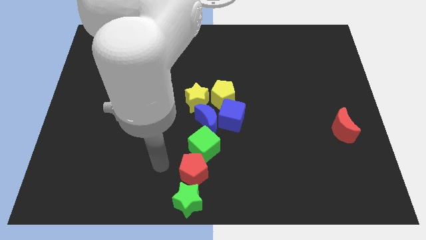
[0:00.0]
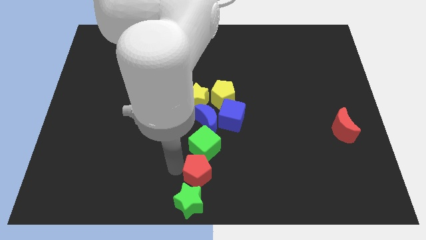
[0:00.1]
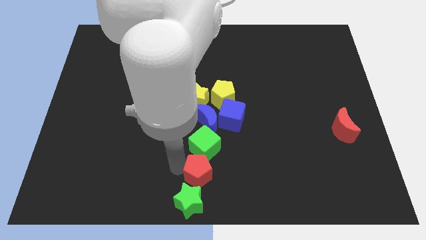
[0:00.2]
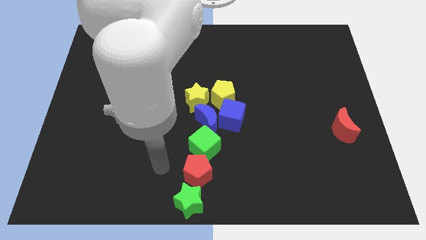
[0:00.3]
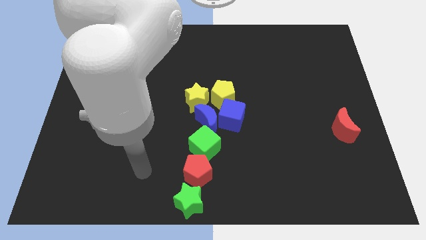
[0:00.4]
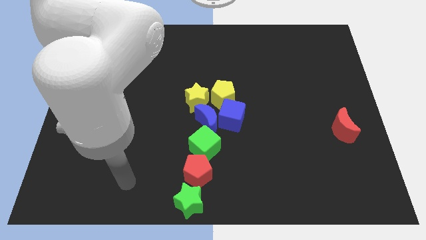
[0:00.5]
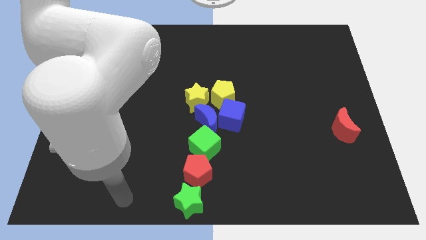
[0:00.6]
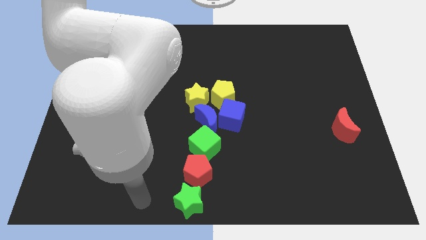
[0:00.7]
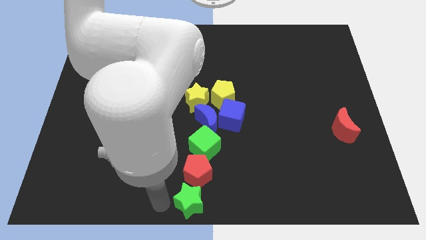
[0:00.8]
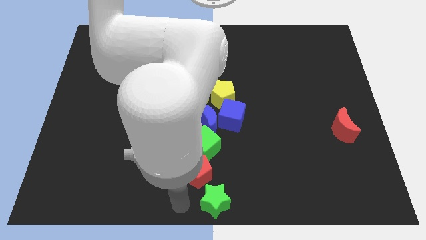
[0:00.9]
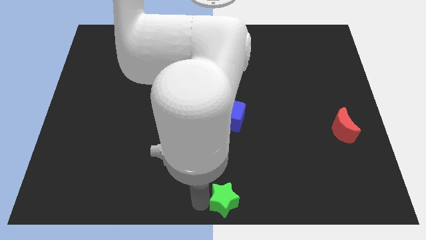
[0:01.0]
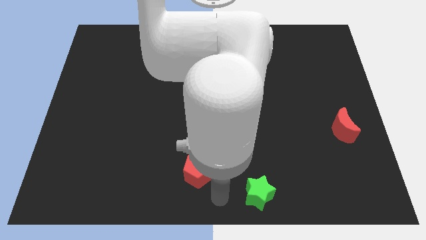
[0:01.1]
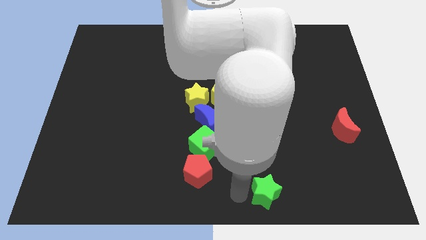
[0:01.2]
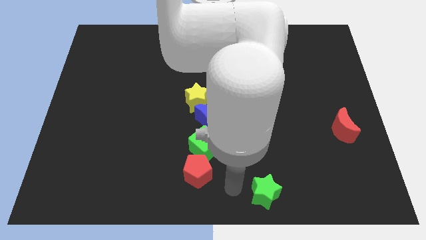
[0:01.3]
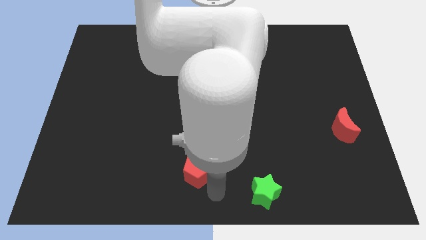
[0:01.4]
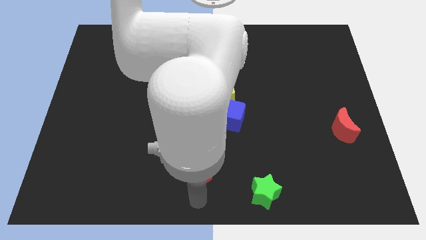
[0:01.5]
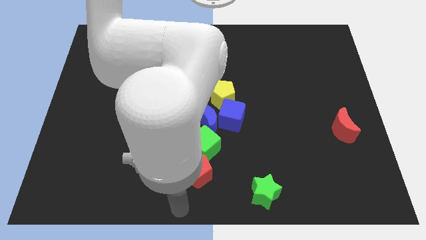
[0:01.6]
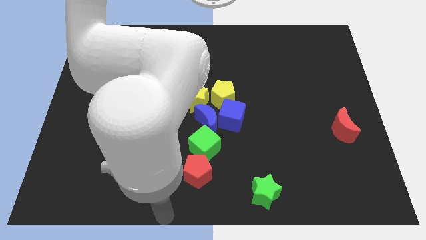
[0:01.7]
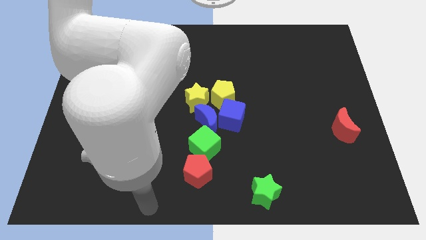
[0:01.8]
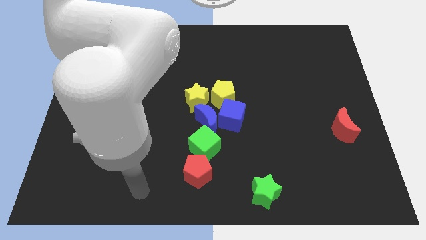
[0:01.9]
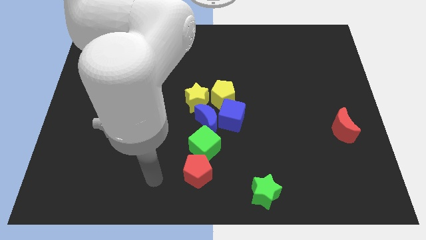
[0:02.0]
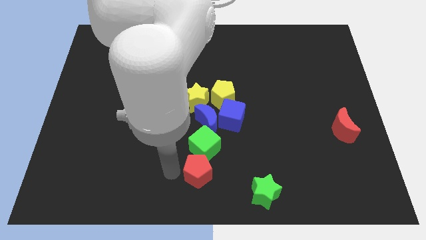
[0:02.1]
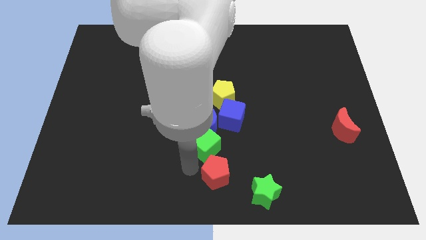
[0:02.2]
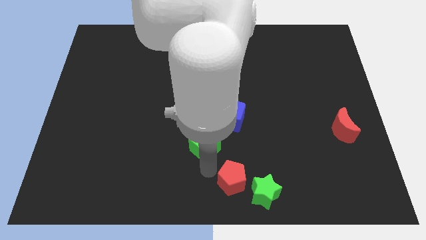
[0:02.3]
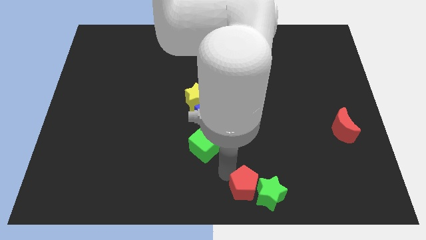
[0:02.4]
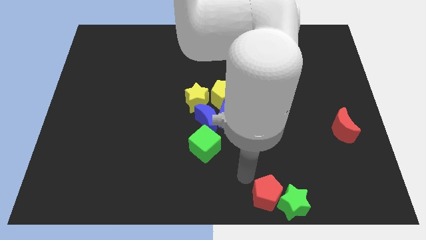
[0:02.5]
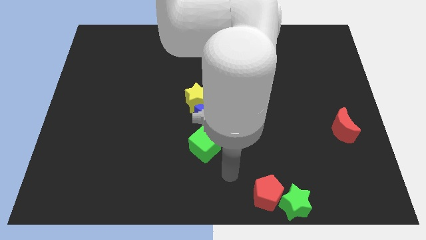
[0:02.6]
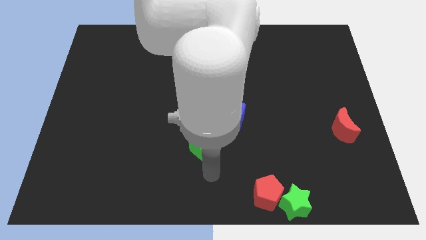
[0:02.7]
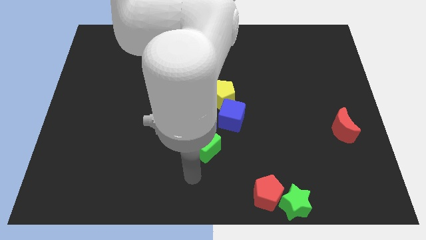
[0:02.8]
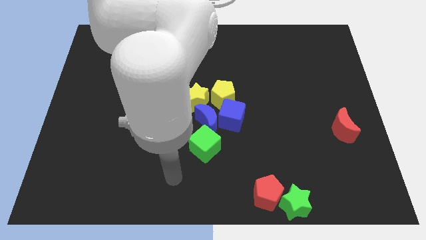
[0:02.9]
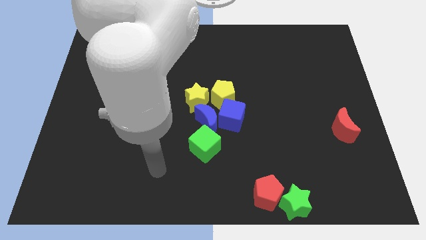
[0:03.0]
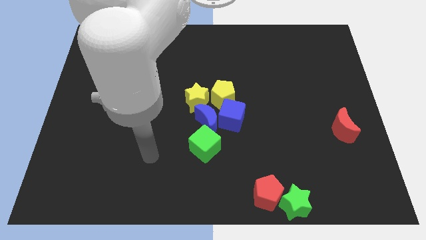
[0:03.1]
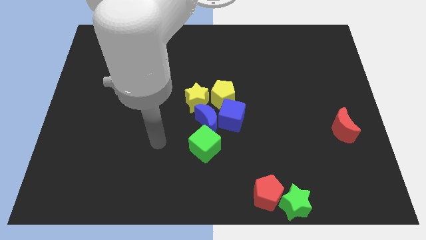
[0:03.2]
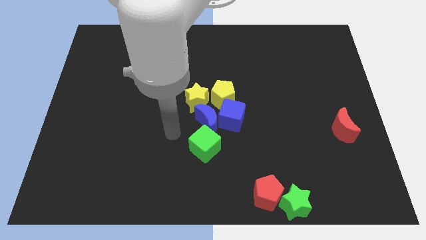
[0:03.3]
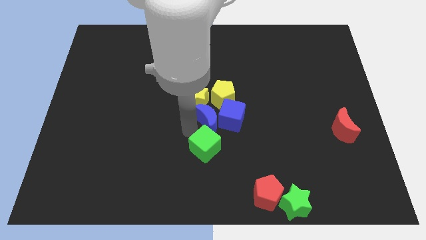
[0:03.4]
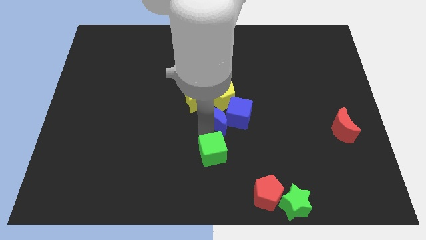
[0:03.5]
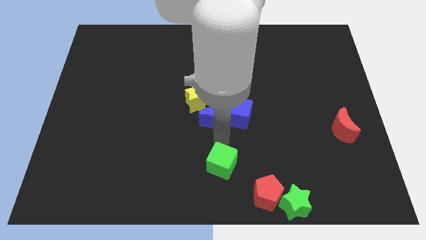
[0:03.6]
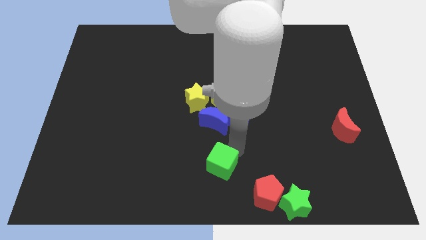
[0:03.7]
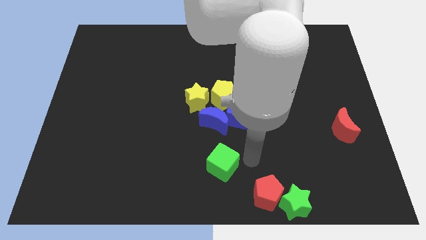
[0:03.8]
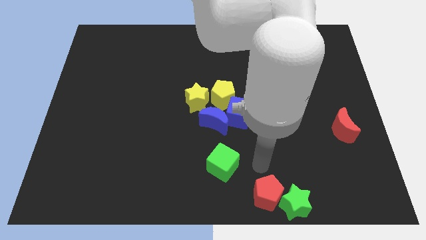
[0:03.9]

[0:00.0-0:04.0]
push the red pentagon into the green star

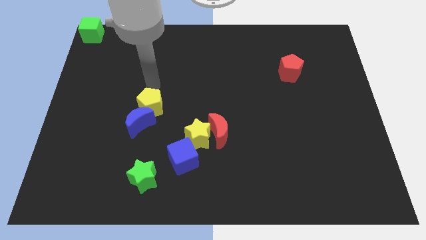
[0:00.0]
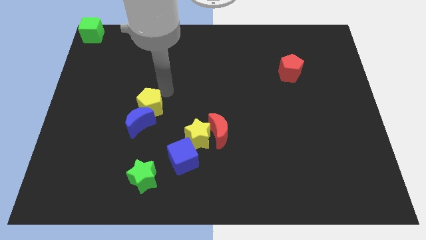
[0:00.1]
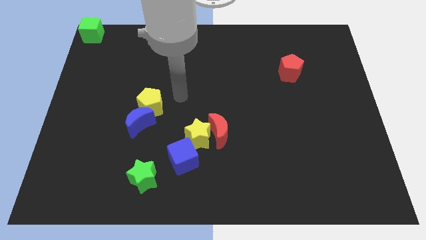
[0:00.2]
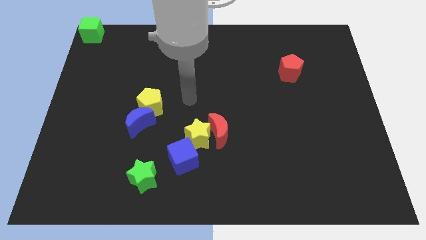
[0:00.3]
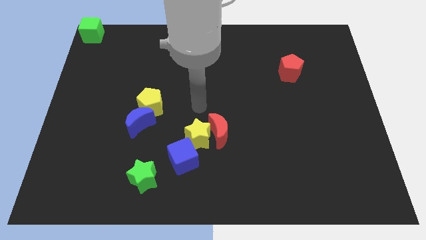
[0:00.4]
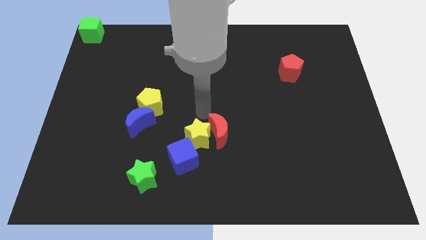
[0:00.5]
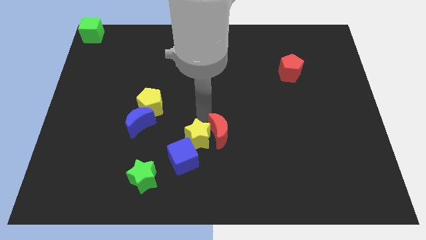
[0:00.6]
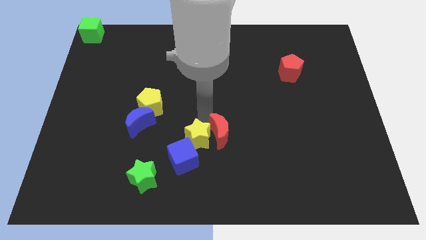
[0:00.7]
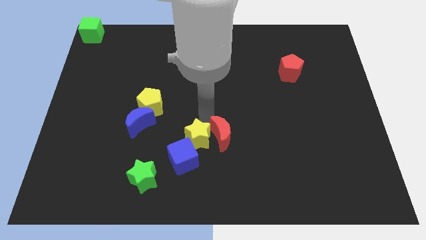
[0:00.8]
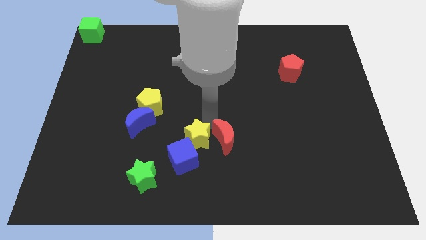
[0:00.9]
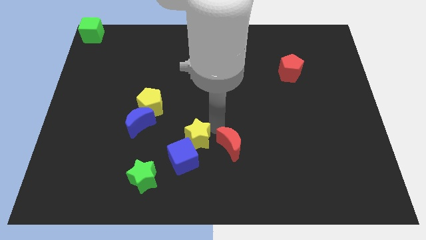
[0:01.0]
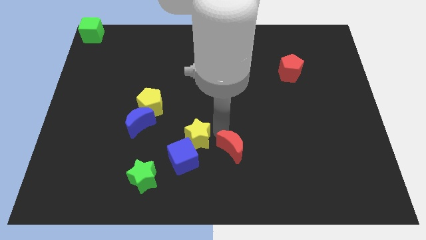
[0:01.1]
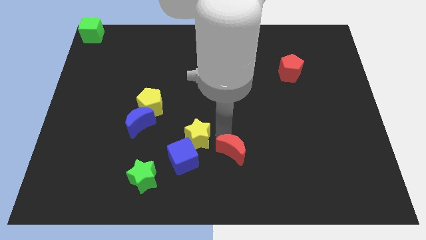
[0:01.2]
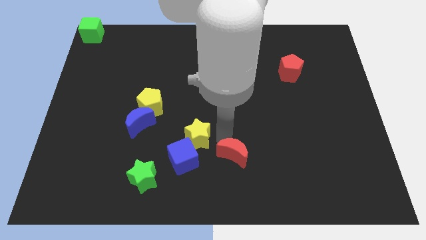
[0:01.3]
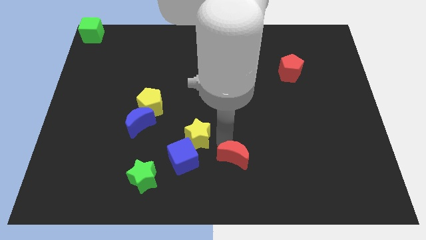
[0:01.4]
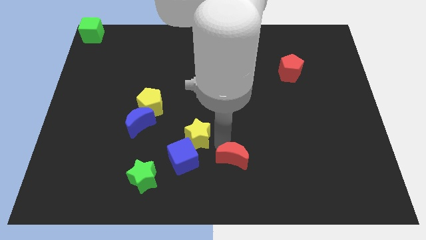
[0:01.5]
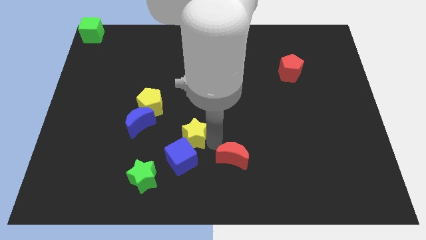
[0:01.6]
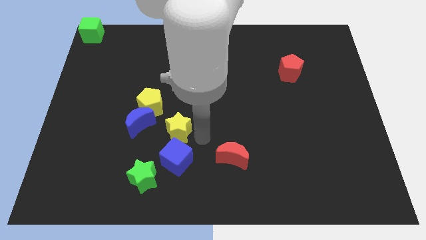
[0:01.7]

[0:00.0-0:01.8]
move the red crescent away from yellow star

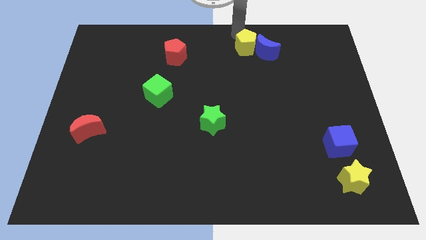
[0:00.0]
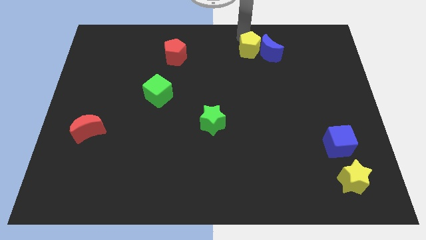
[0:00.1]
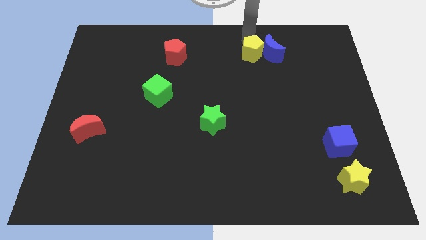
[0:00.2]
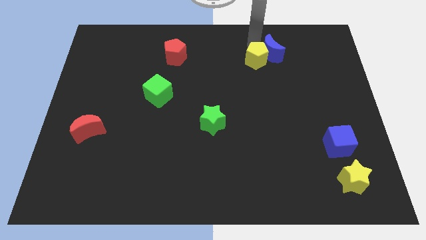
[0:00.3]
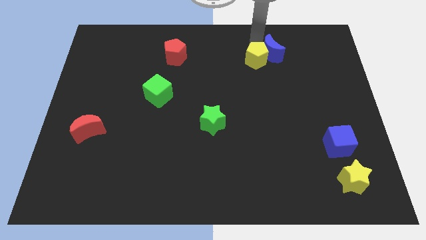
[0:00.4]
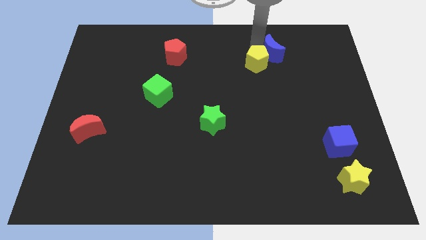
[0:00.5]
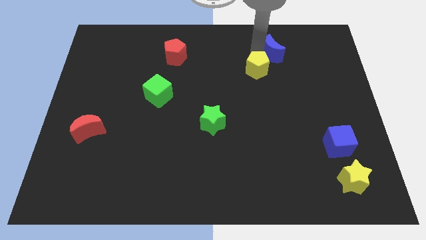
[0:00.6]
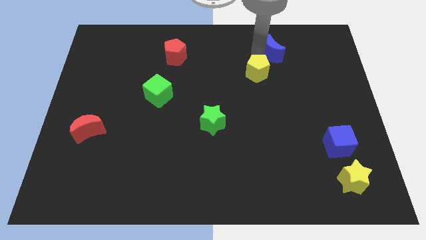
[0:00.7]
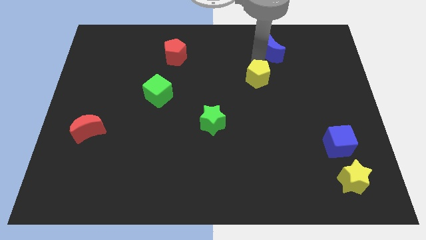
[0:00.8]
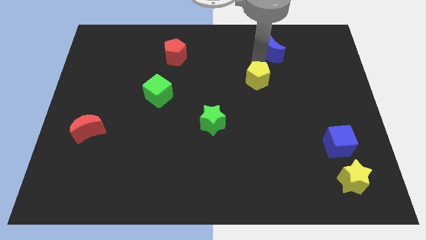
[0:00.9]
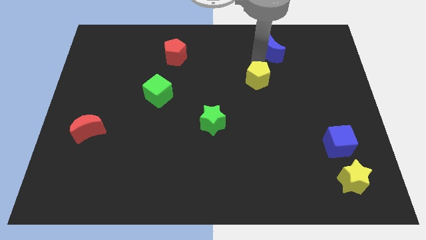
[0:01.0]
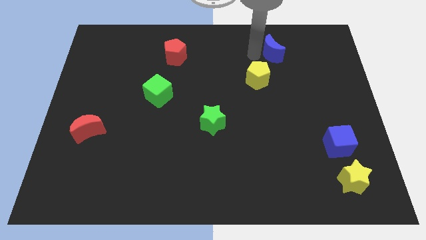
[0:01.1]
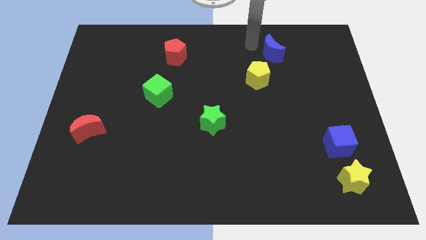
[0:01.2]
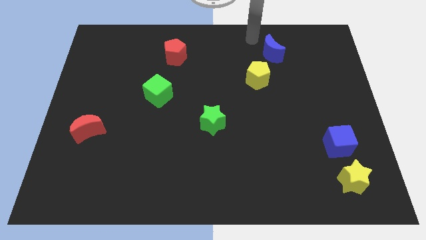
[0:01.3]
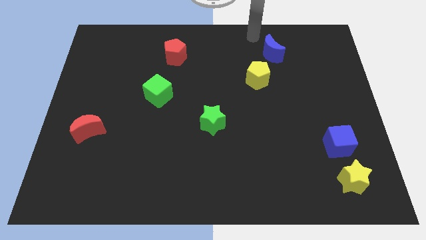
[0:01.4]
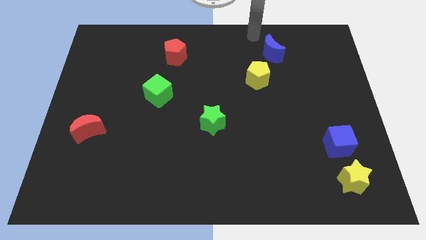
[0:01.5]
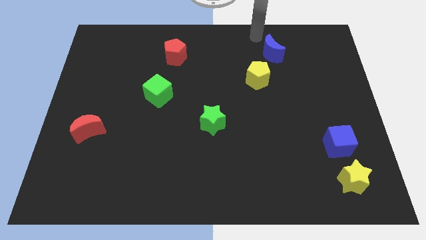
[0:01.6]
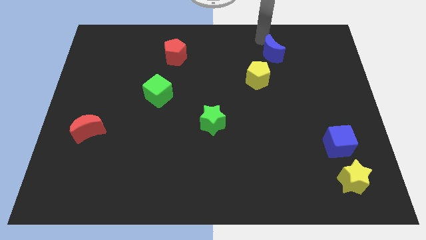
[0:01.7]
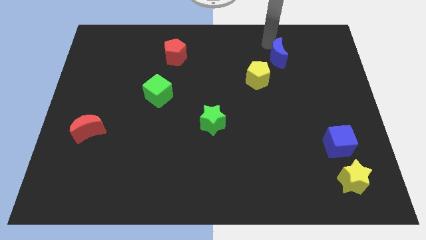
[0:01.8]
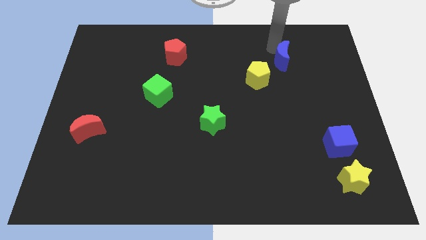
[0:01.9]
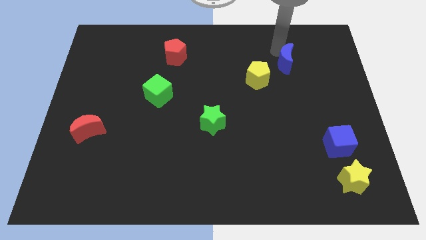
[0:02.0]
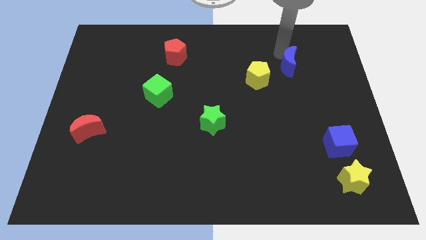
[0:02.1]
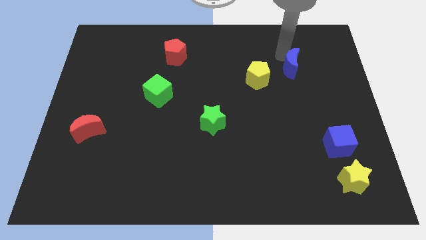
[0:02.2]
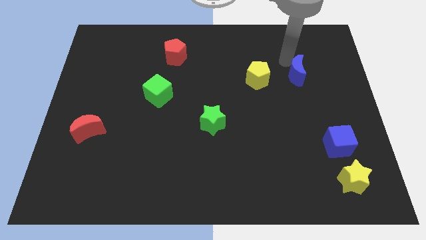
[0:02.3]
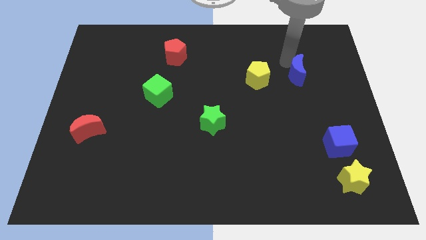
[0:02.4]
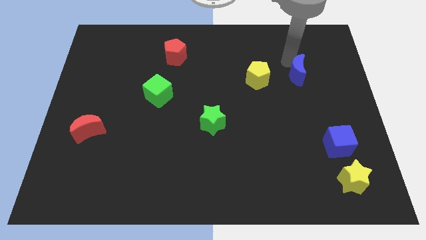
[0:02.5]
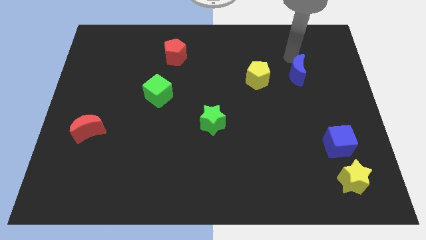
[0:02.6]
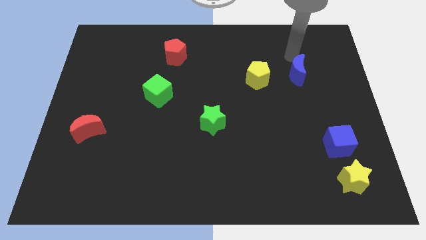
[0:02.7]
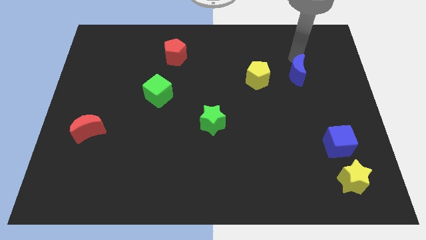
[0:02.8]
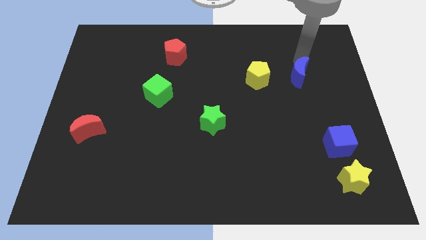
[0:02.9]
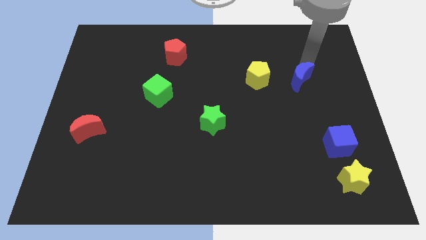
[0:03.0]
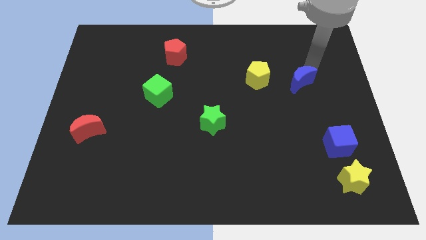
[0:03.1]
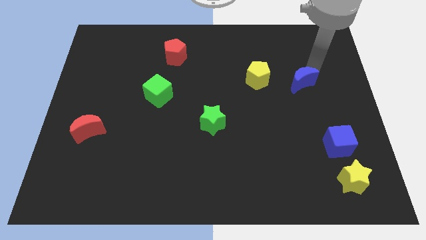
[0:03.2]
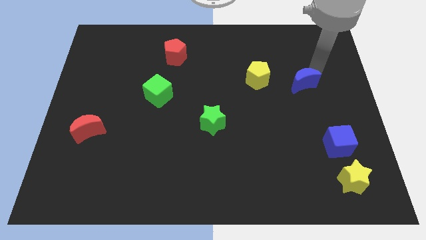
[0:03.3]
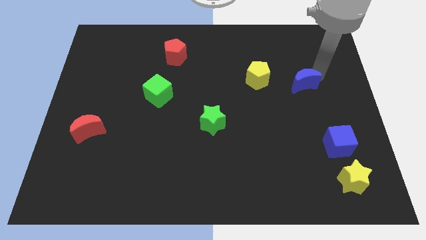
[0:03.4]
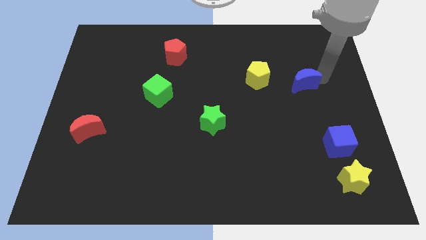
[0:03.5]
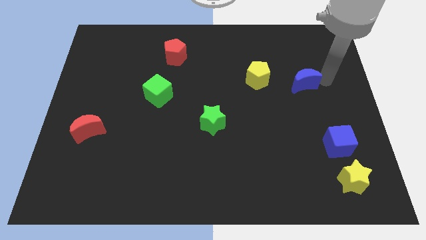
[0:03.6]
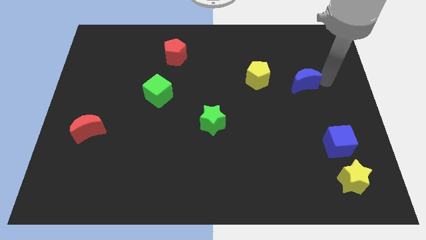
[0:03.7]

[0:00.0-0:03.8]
push blue crescent slightly towards down
